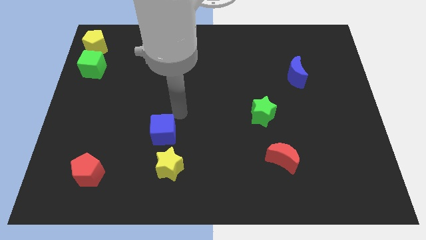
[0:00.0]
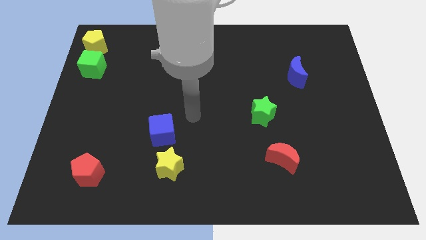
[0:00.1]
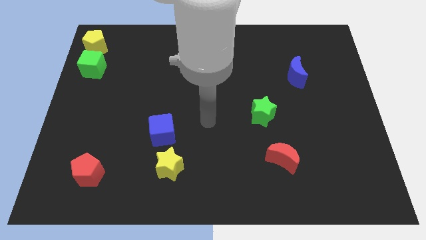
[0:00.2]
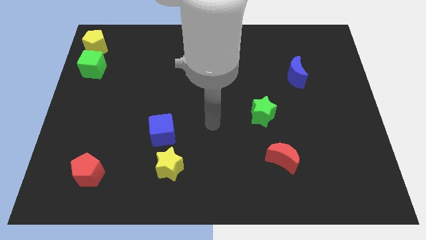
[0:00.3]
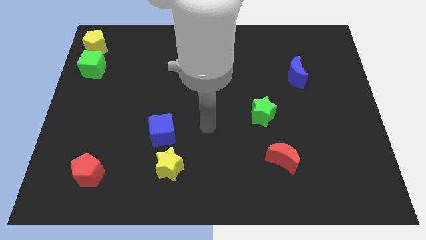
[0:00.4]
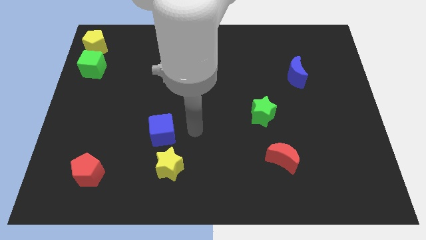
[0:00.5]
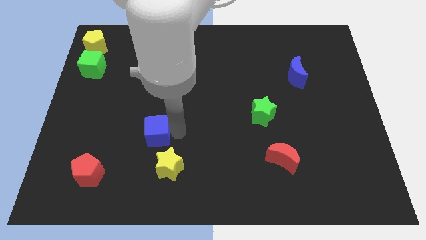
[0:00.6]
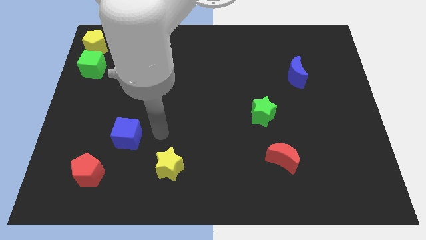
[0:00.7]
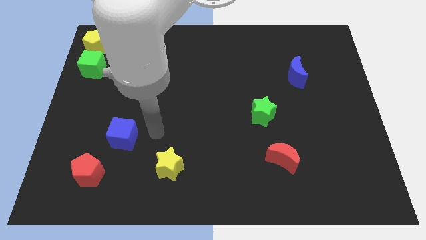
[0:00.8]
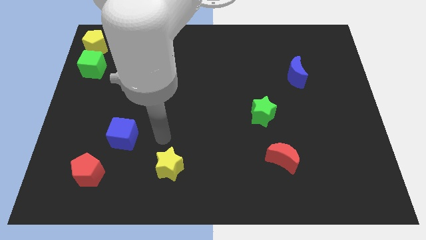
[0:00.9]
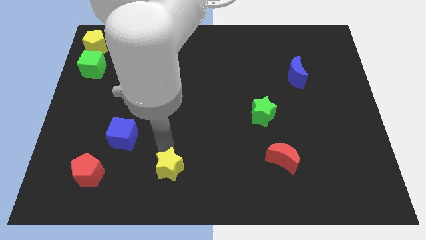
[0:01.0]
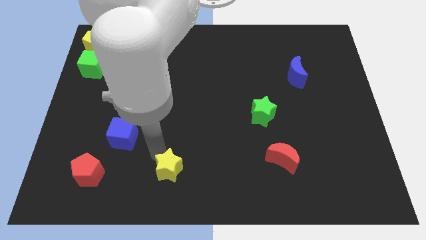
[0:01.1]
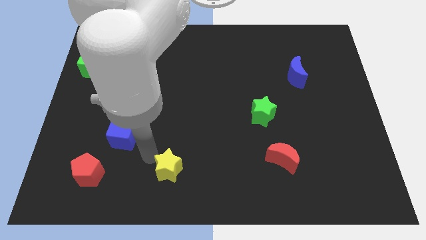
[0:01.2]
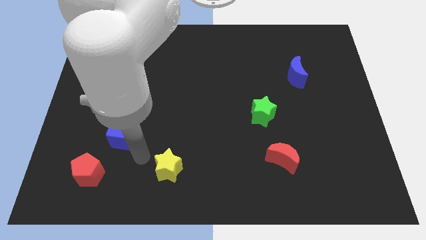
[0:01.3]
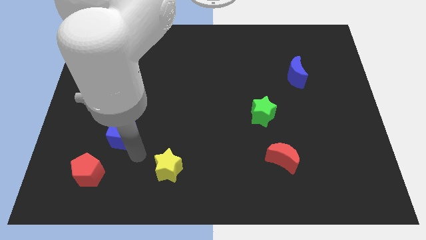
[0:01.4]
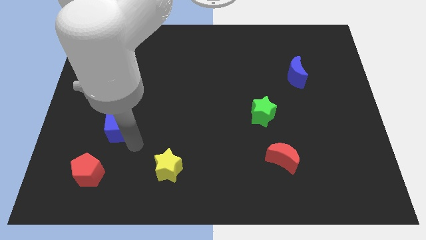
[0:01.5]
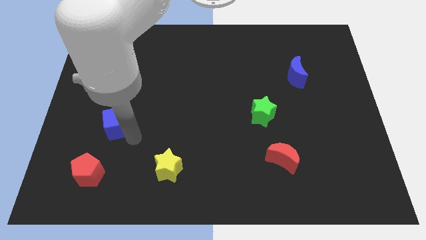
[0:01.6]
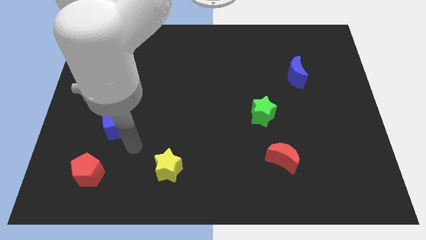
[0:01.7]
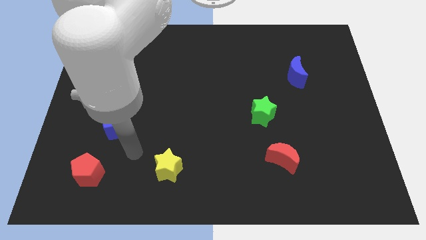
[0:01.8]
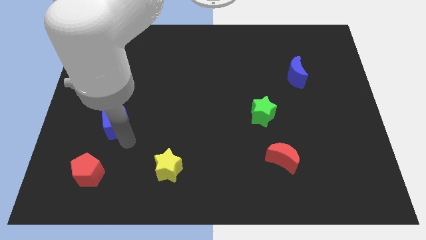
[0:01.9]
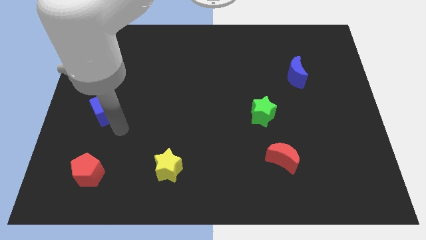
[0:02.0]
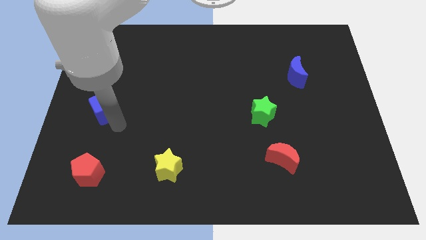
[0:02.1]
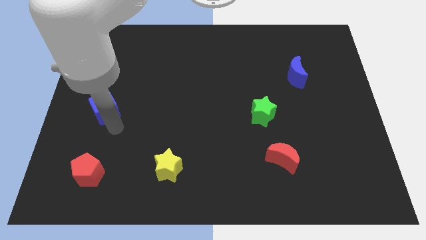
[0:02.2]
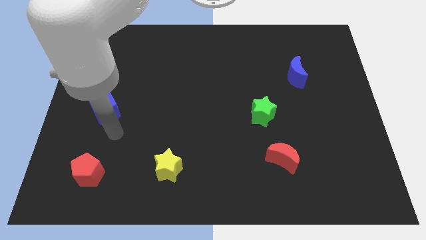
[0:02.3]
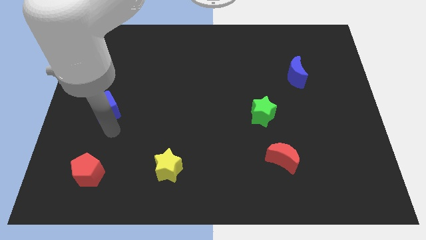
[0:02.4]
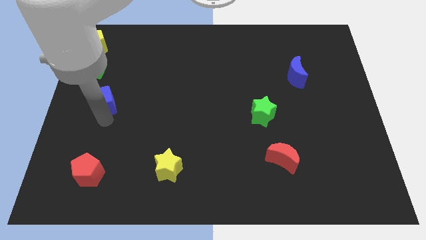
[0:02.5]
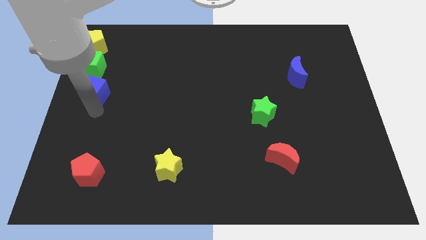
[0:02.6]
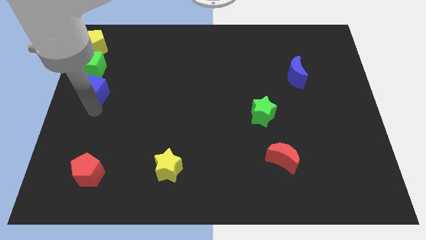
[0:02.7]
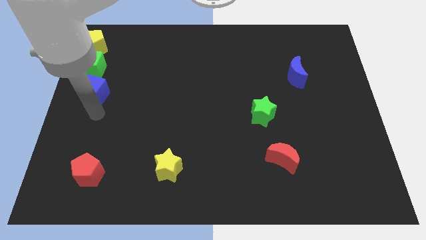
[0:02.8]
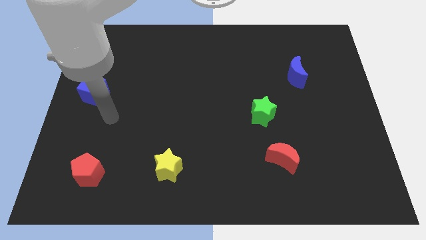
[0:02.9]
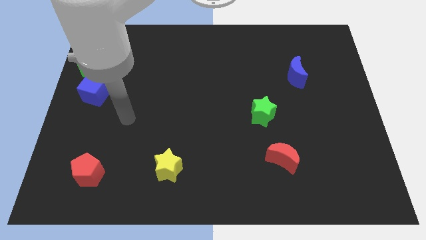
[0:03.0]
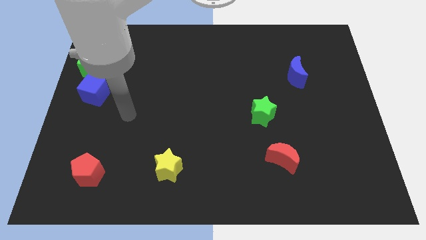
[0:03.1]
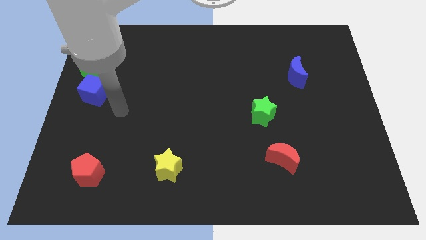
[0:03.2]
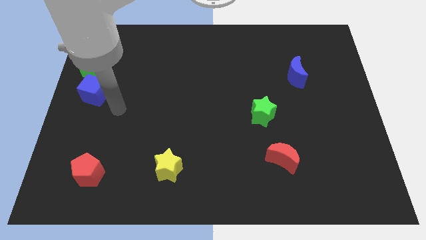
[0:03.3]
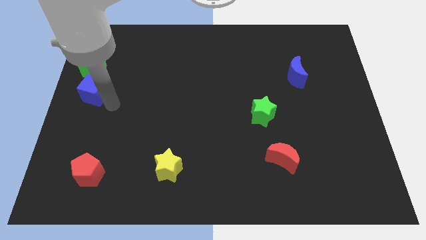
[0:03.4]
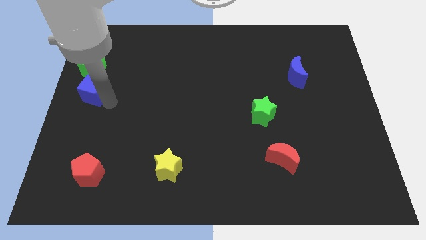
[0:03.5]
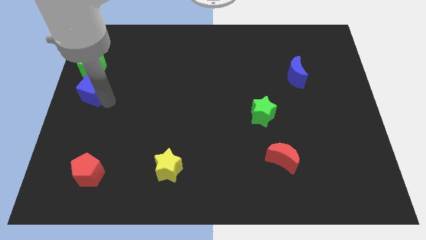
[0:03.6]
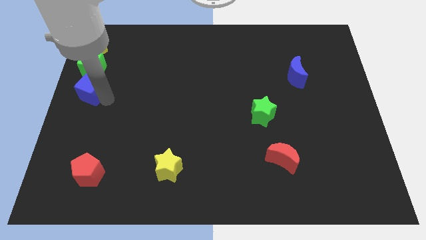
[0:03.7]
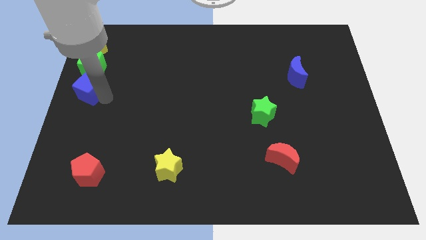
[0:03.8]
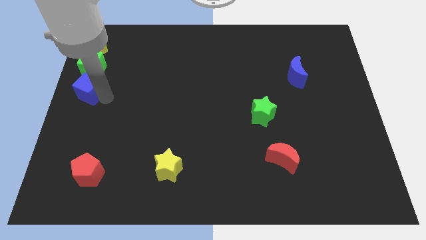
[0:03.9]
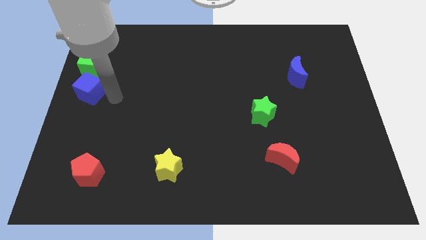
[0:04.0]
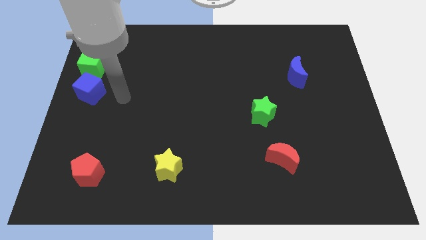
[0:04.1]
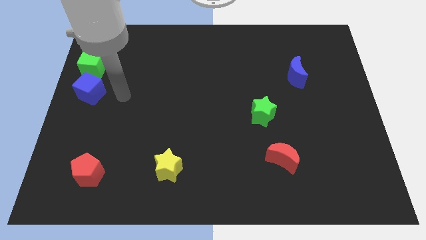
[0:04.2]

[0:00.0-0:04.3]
place the blue cube below the green cube

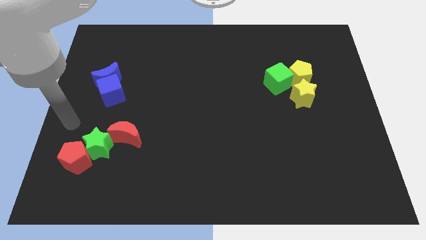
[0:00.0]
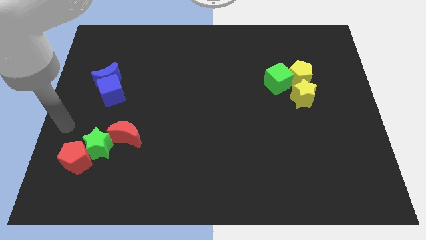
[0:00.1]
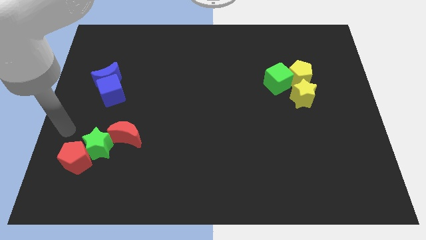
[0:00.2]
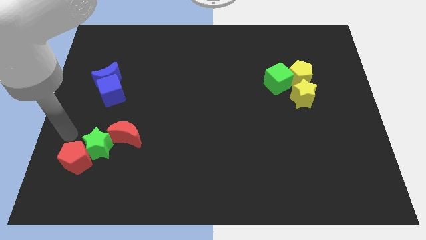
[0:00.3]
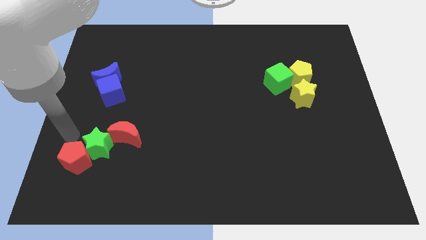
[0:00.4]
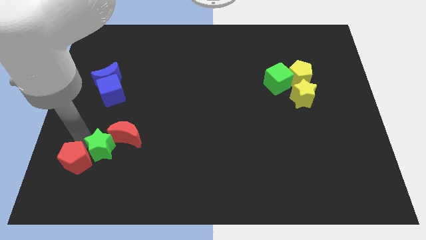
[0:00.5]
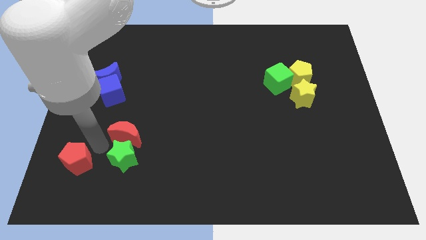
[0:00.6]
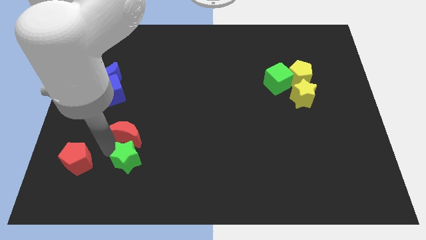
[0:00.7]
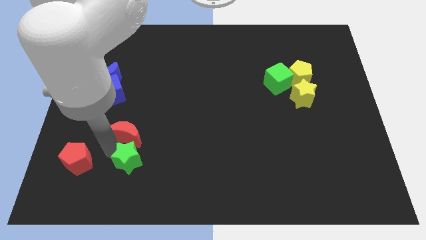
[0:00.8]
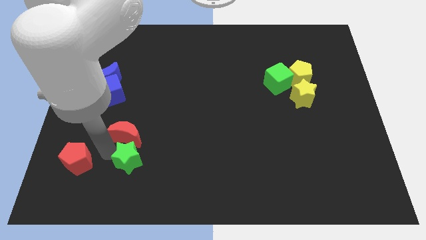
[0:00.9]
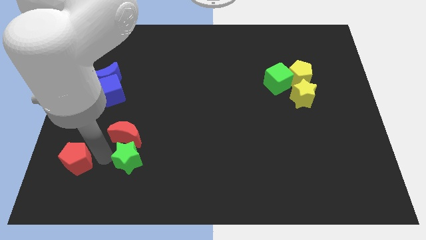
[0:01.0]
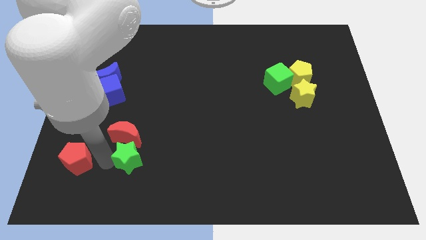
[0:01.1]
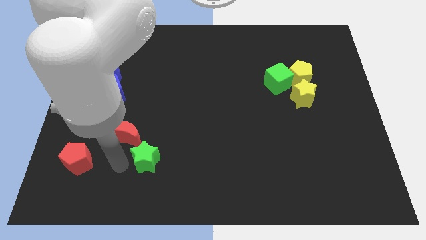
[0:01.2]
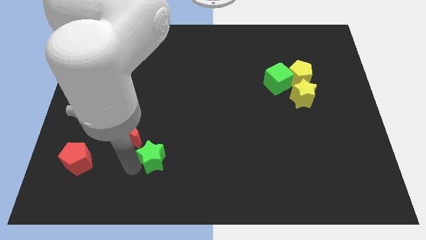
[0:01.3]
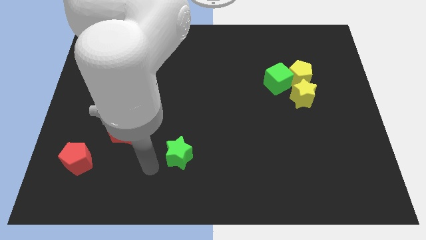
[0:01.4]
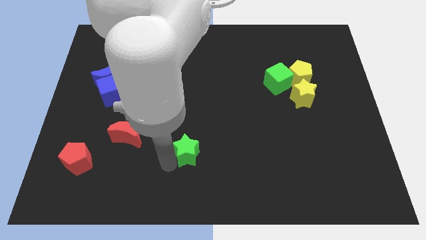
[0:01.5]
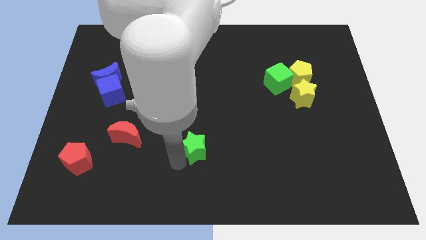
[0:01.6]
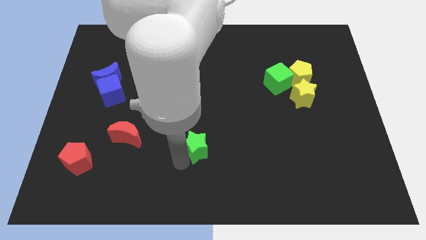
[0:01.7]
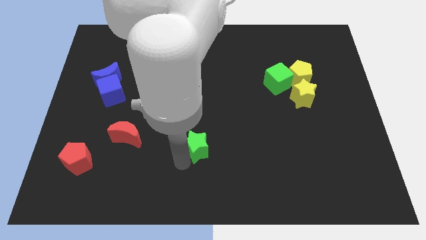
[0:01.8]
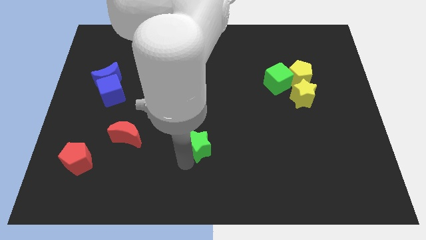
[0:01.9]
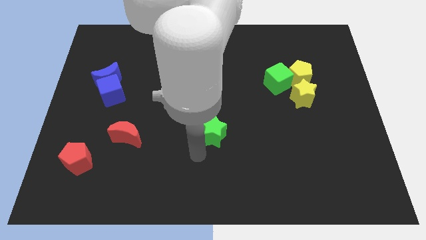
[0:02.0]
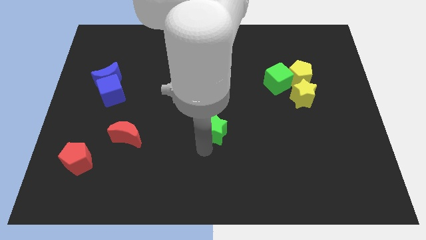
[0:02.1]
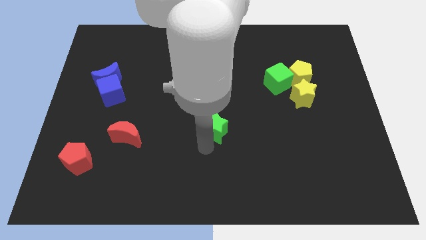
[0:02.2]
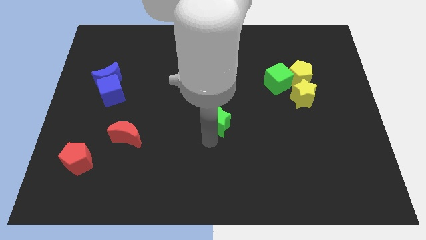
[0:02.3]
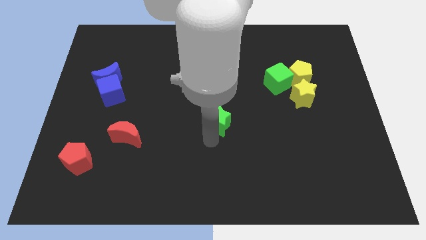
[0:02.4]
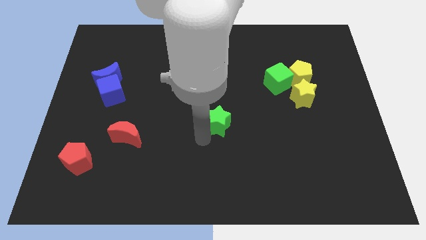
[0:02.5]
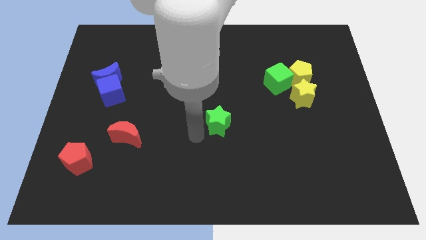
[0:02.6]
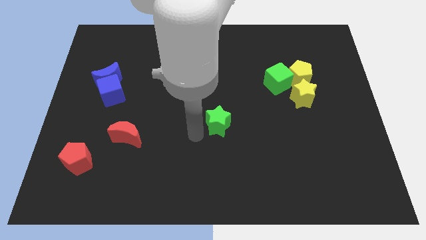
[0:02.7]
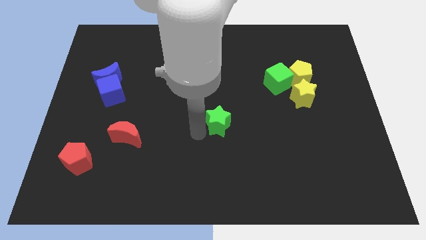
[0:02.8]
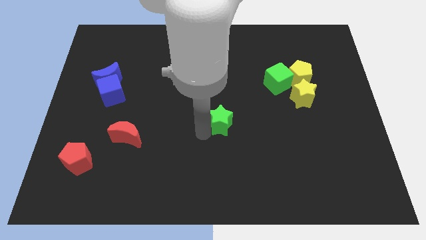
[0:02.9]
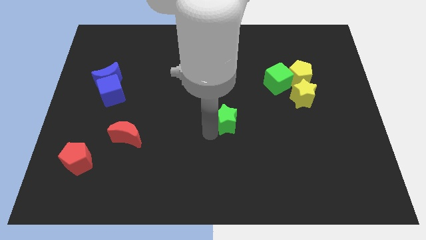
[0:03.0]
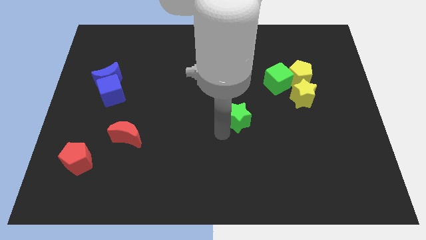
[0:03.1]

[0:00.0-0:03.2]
slide the green star towards the center

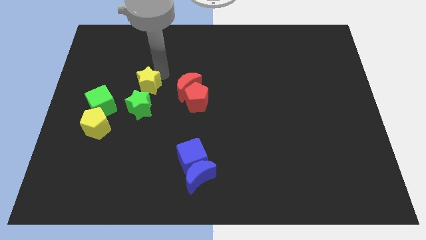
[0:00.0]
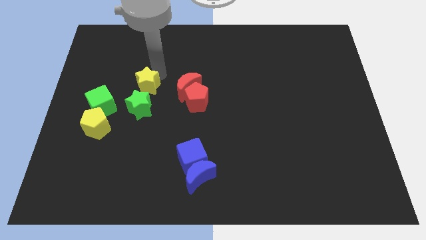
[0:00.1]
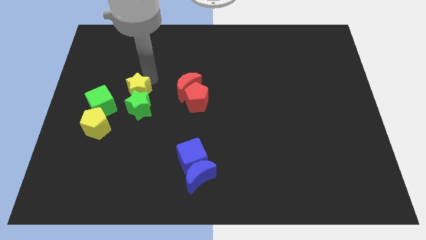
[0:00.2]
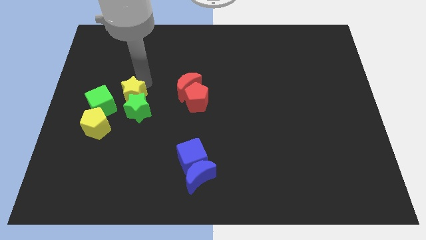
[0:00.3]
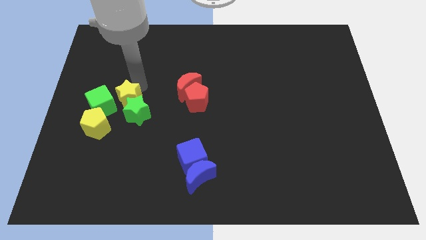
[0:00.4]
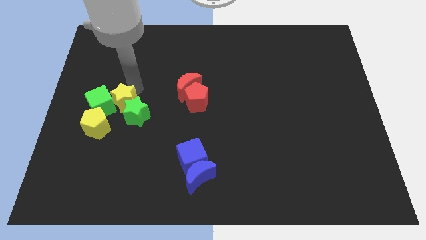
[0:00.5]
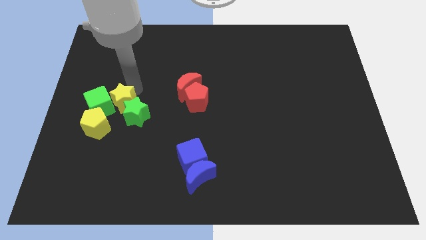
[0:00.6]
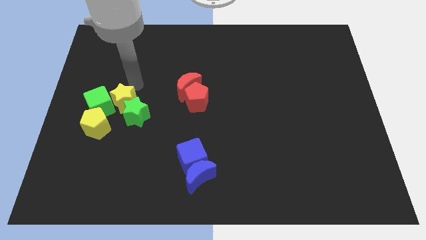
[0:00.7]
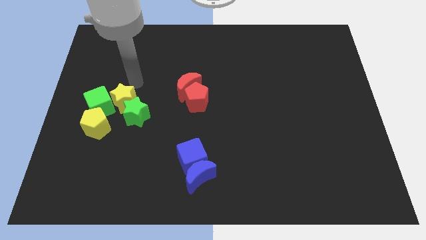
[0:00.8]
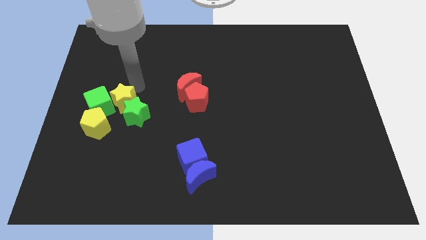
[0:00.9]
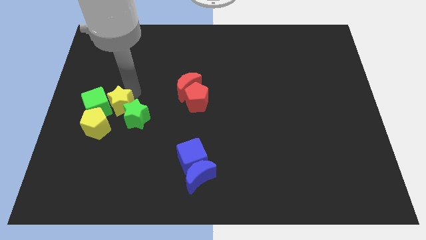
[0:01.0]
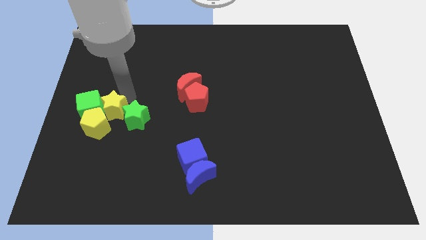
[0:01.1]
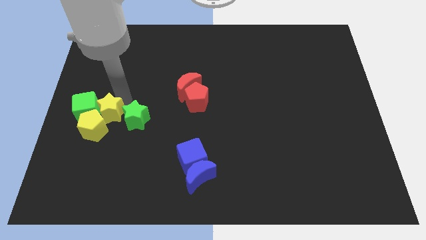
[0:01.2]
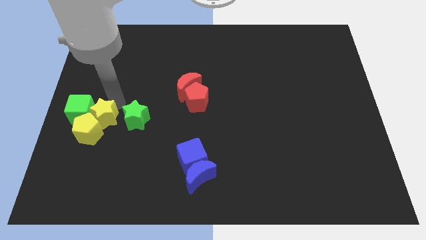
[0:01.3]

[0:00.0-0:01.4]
push the yellow star to the right of the yellow pentagon
